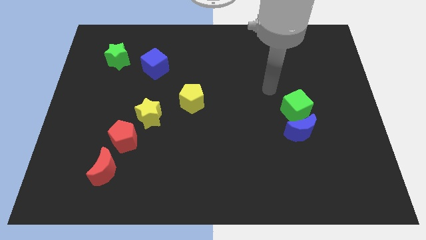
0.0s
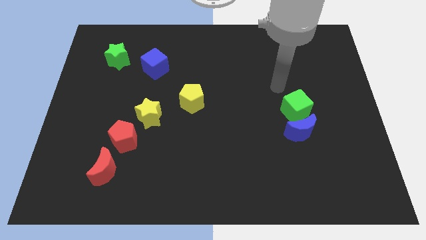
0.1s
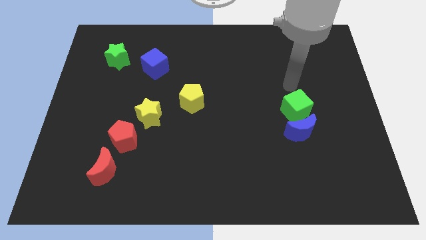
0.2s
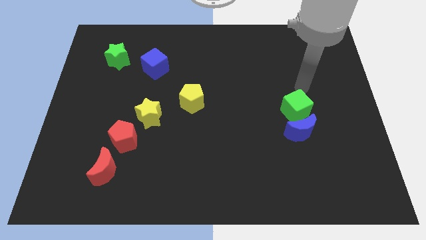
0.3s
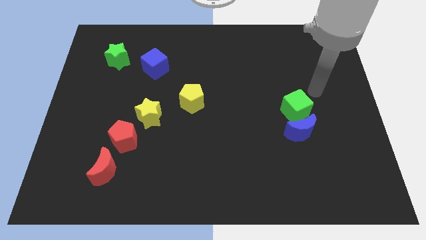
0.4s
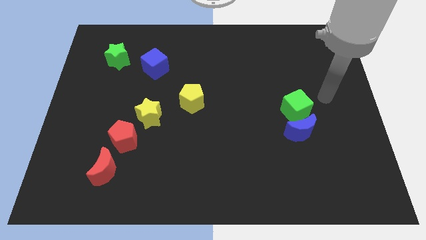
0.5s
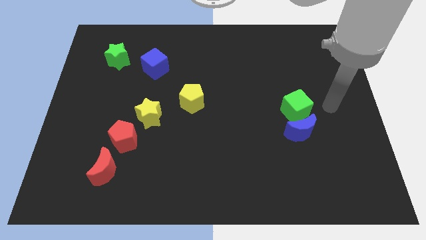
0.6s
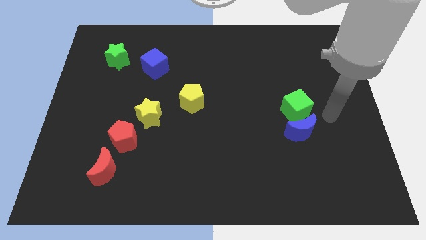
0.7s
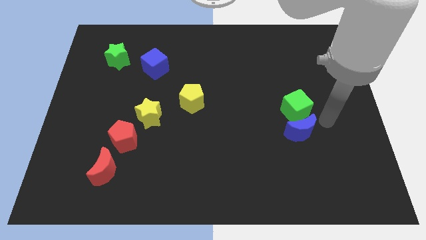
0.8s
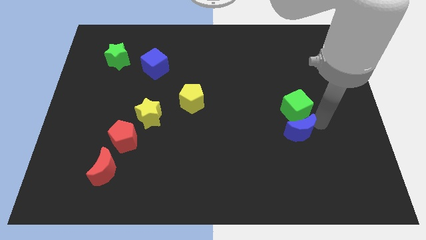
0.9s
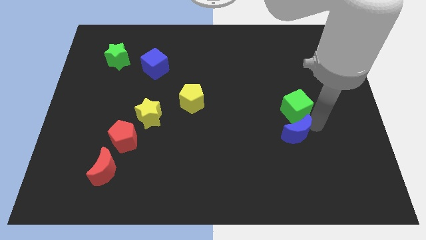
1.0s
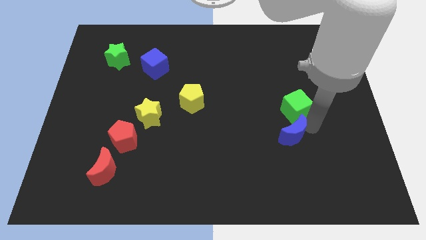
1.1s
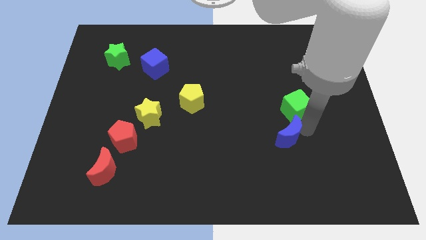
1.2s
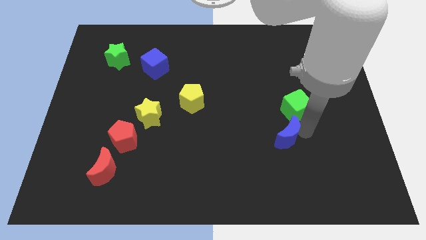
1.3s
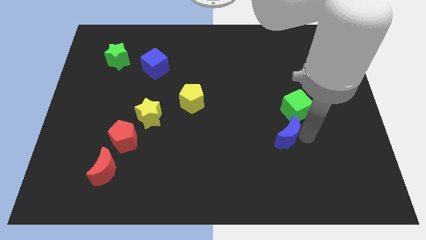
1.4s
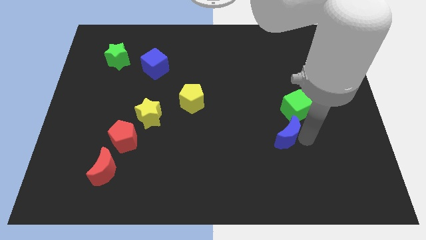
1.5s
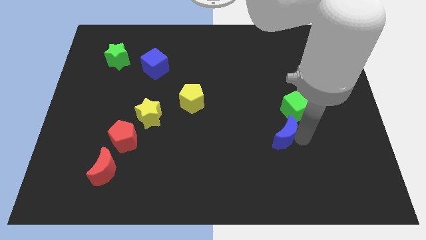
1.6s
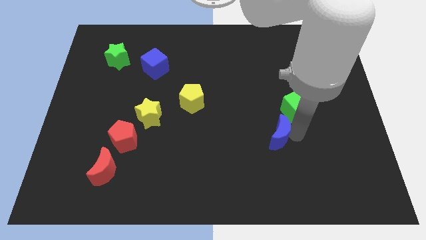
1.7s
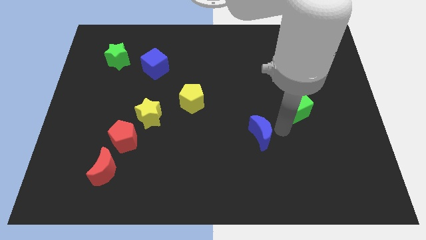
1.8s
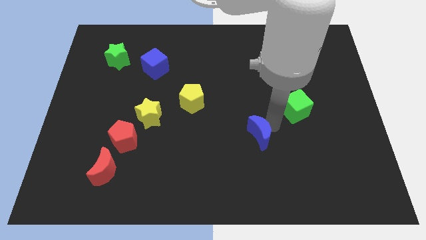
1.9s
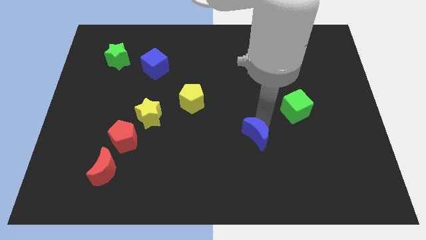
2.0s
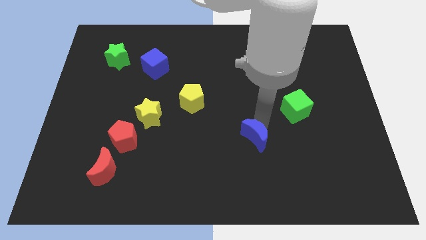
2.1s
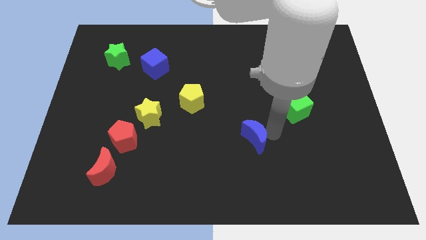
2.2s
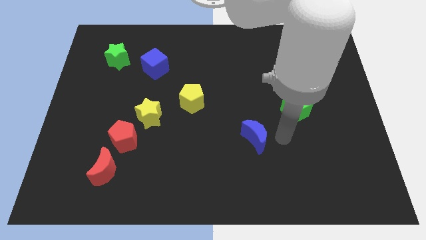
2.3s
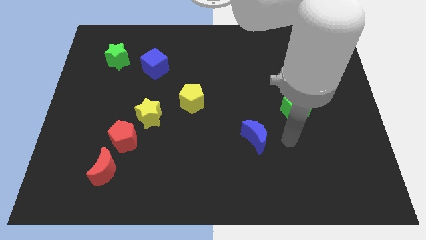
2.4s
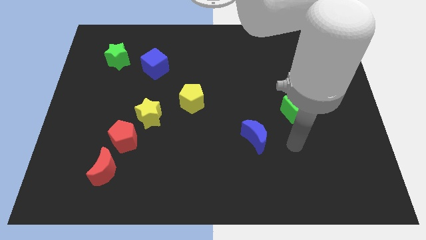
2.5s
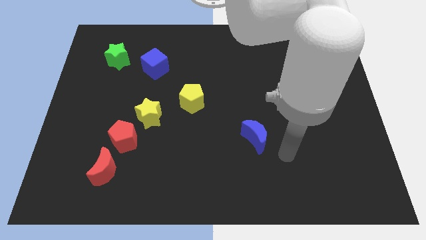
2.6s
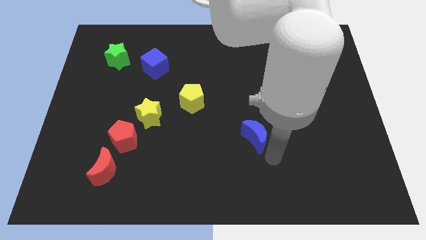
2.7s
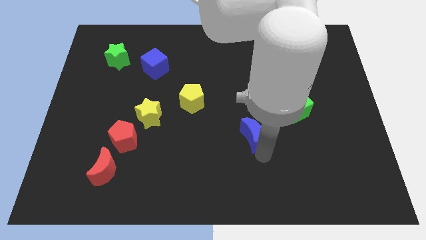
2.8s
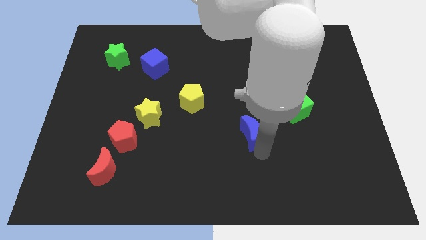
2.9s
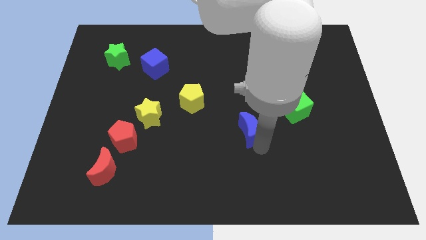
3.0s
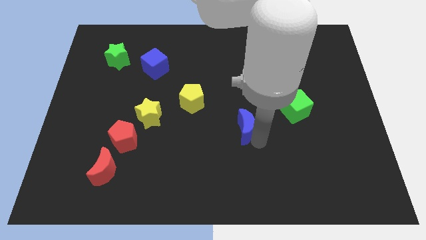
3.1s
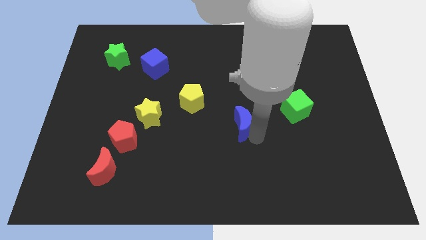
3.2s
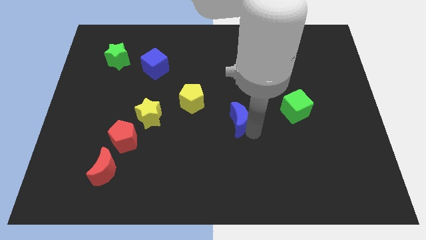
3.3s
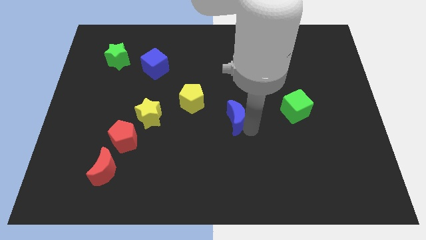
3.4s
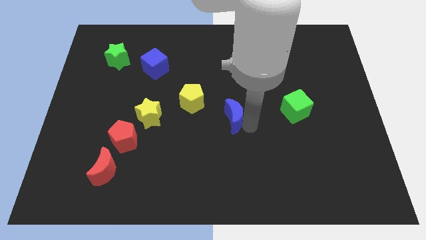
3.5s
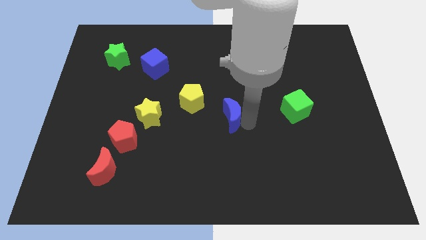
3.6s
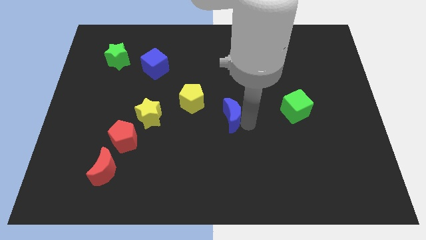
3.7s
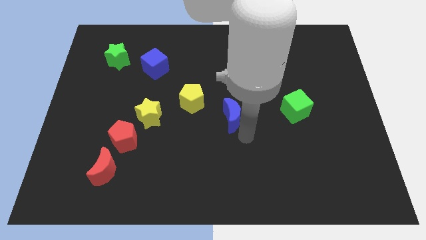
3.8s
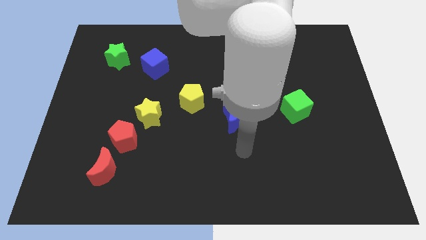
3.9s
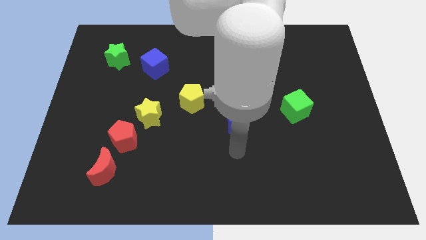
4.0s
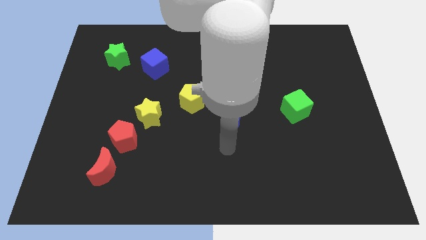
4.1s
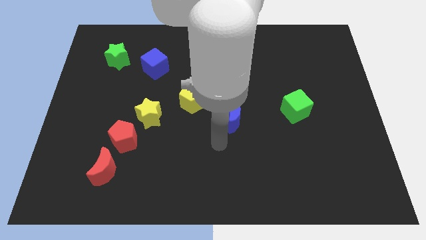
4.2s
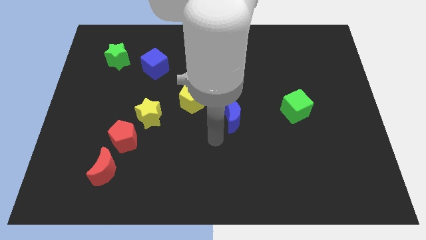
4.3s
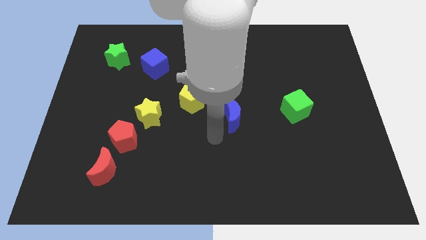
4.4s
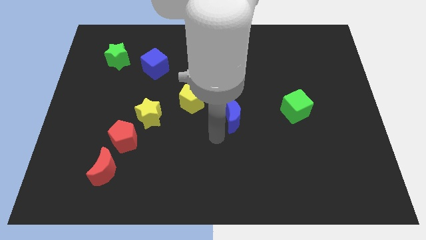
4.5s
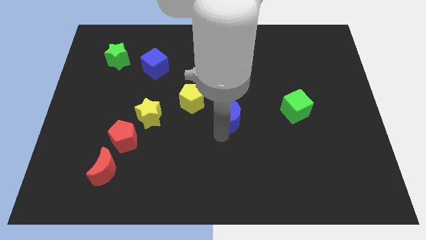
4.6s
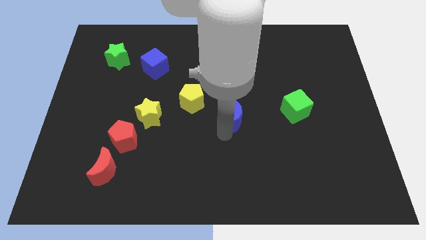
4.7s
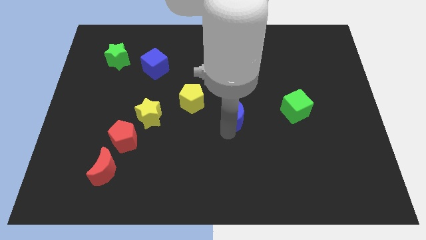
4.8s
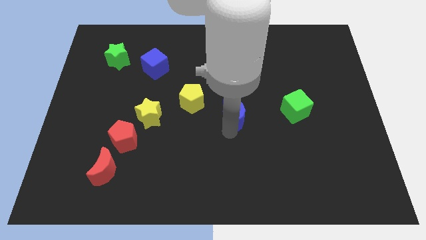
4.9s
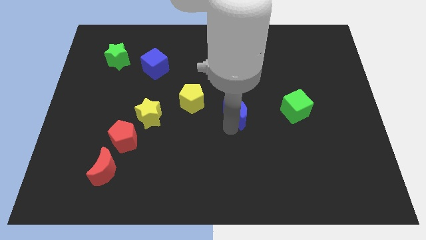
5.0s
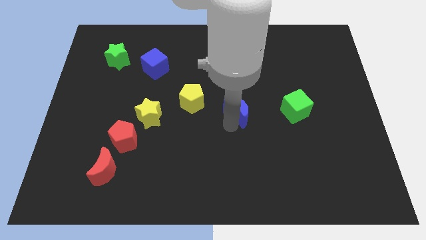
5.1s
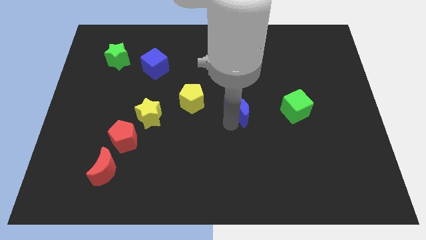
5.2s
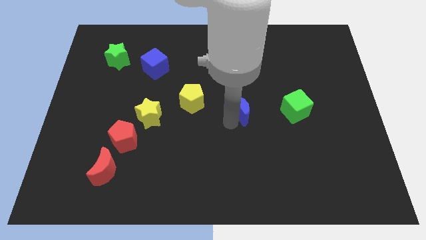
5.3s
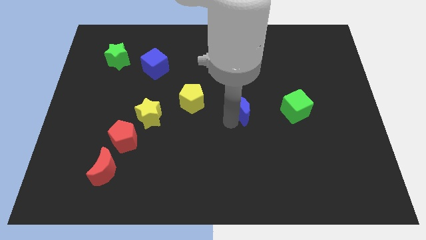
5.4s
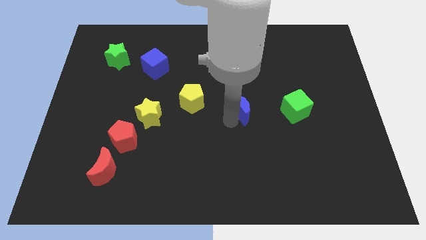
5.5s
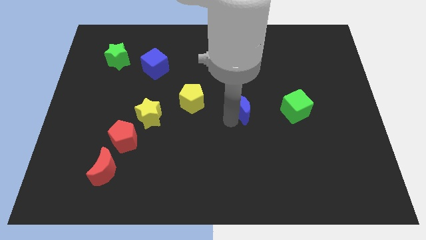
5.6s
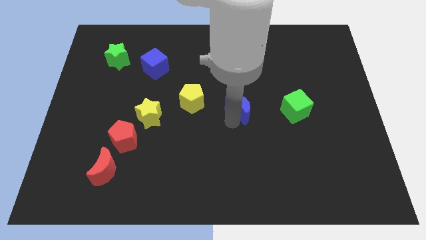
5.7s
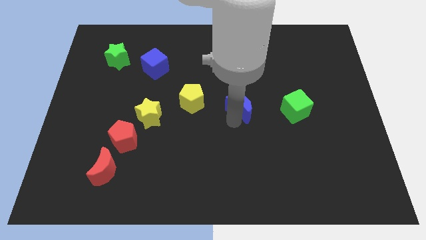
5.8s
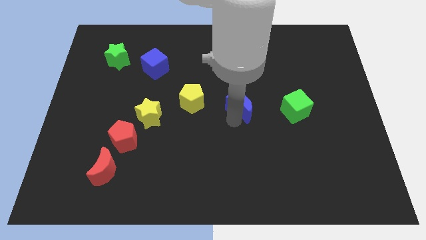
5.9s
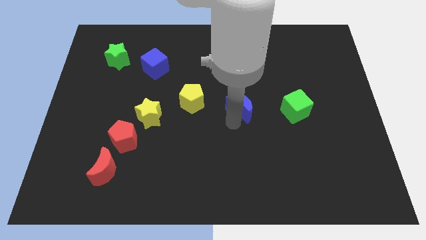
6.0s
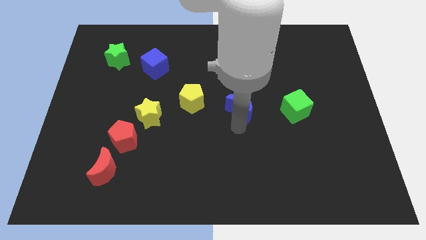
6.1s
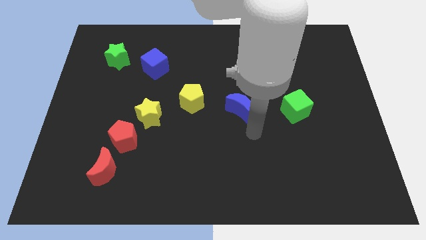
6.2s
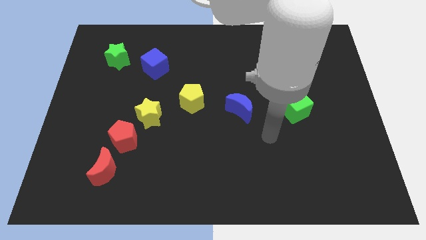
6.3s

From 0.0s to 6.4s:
push the blue crescent horizontally to green cube

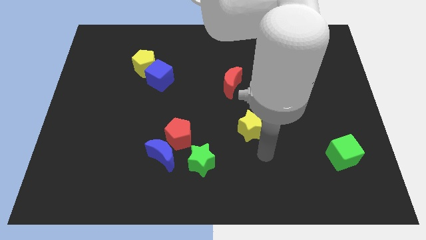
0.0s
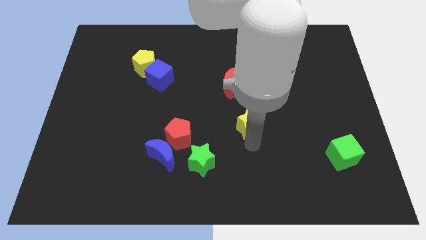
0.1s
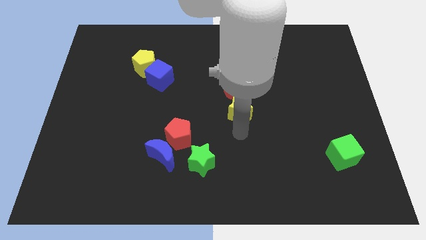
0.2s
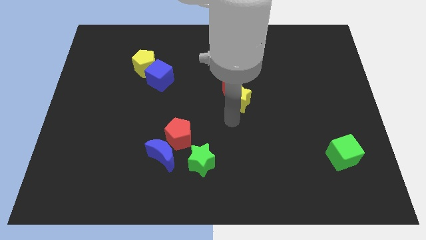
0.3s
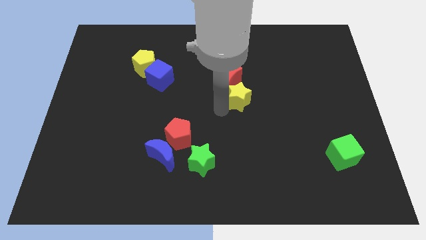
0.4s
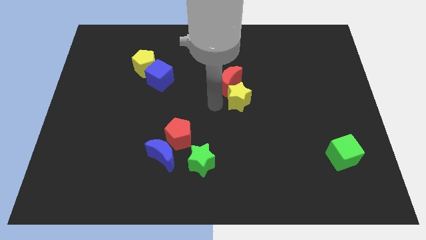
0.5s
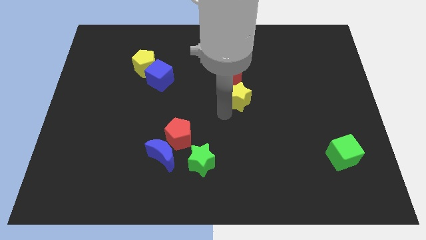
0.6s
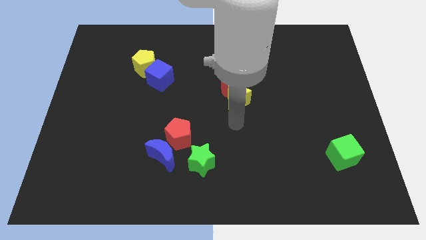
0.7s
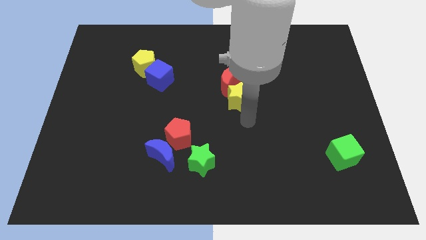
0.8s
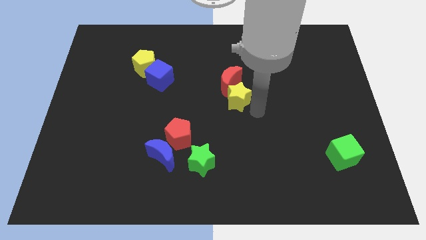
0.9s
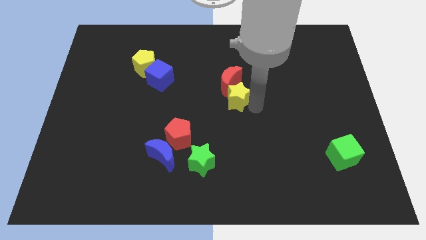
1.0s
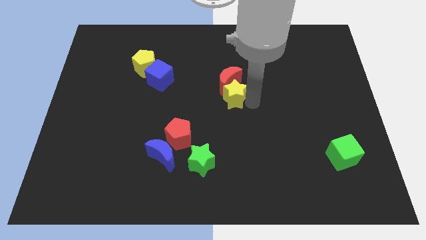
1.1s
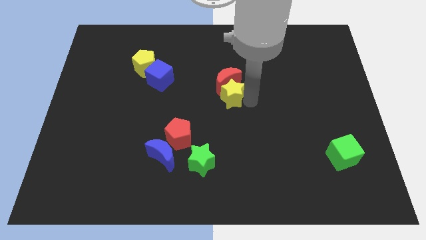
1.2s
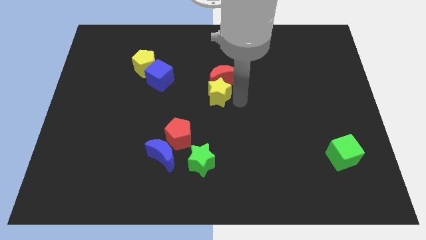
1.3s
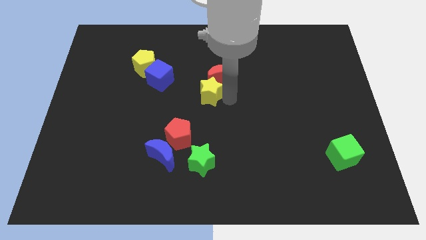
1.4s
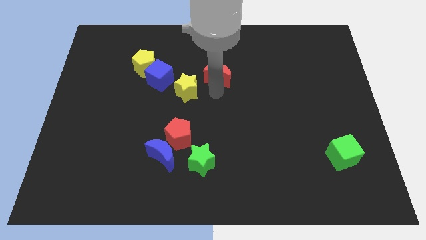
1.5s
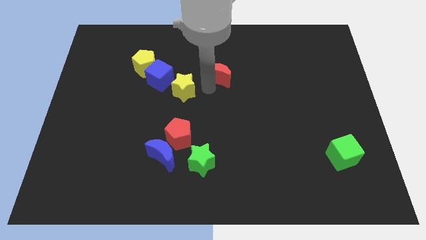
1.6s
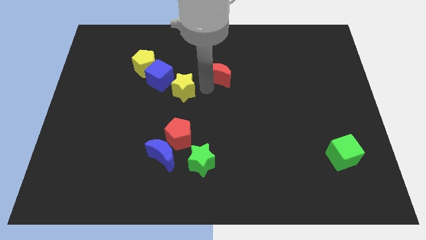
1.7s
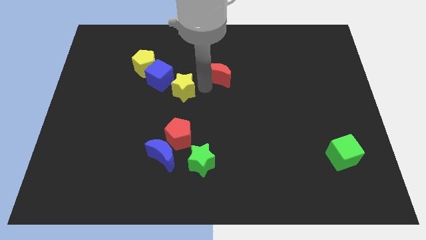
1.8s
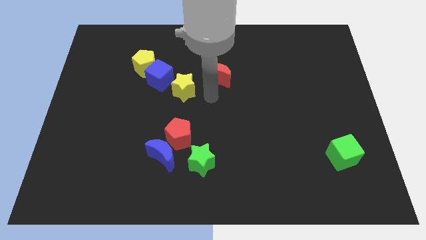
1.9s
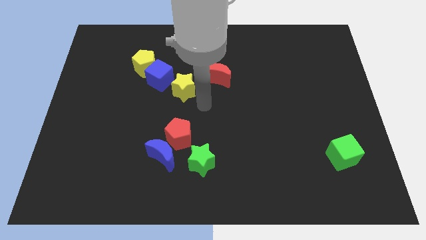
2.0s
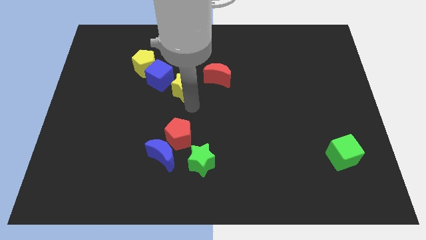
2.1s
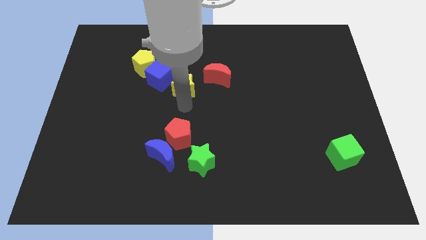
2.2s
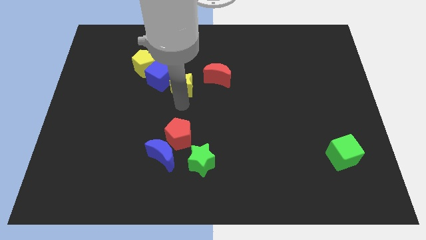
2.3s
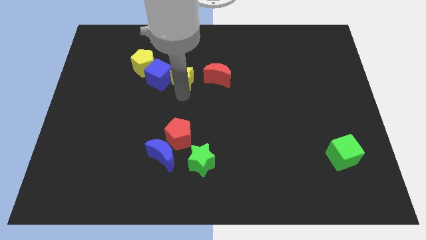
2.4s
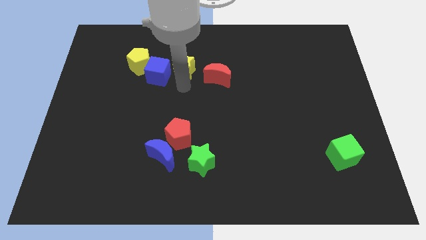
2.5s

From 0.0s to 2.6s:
place yellow star in between blue cube and red moon
